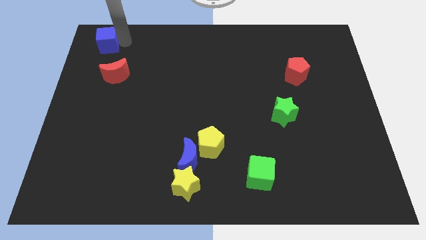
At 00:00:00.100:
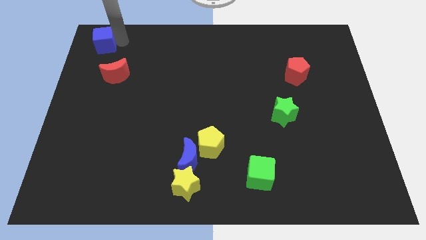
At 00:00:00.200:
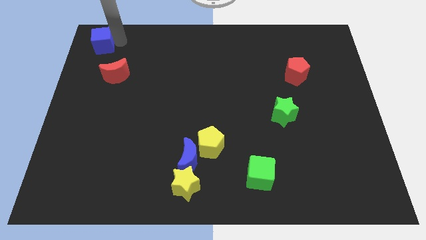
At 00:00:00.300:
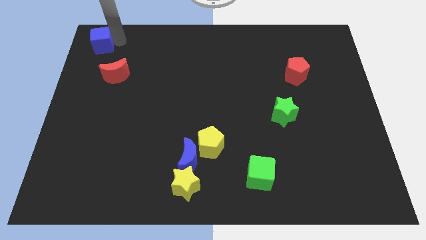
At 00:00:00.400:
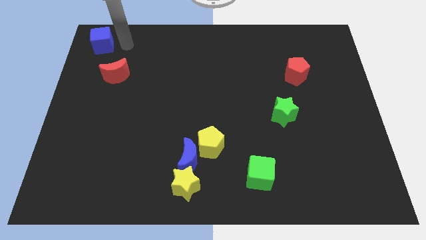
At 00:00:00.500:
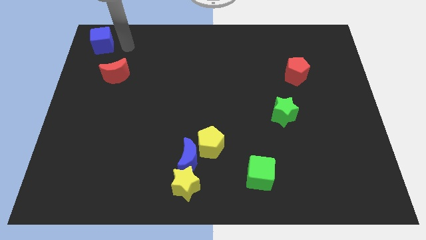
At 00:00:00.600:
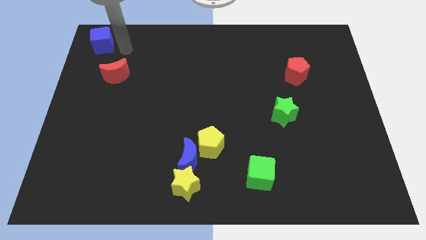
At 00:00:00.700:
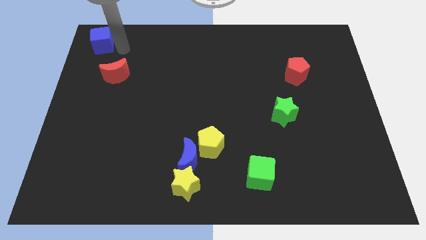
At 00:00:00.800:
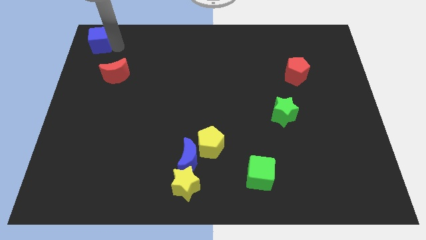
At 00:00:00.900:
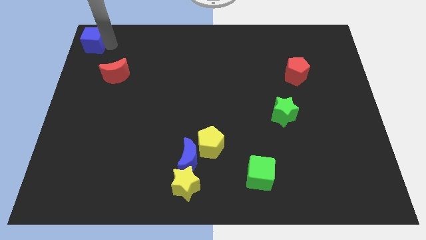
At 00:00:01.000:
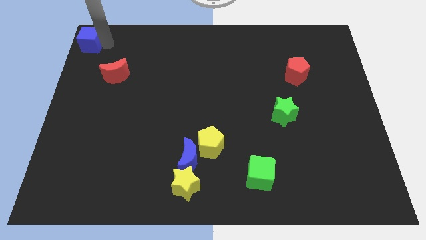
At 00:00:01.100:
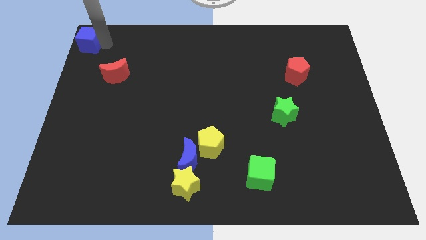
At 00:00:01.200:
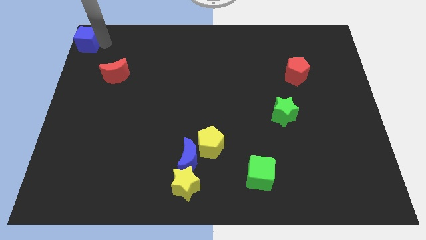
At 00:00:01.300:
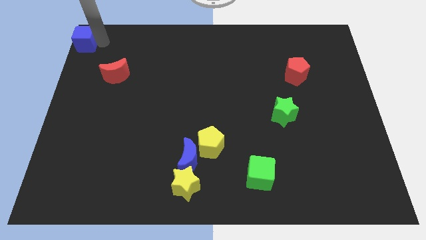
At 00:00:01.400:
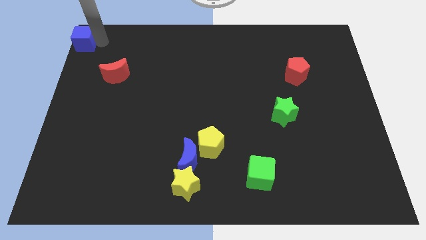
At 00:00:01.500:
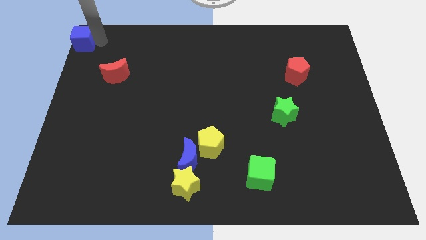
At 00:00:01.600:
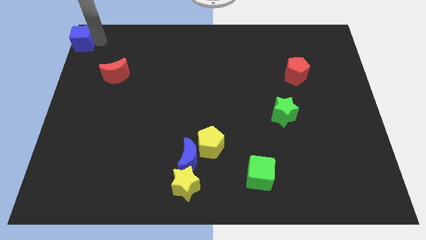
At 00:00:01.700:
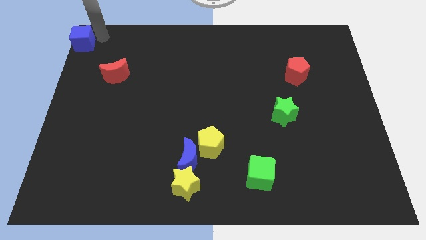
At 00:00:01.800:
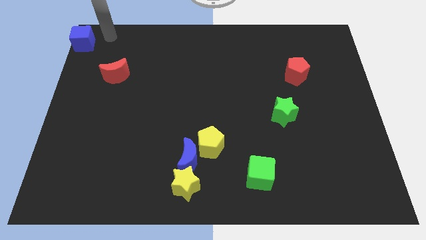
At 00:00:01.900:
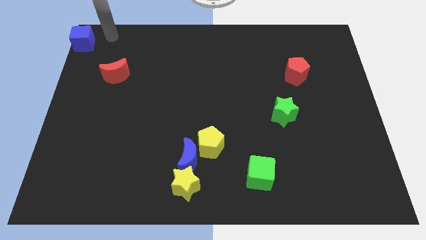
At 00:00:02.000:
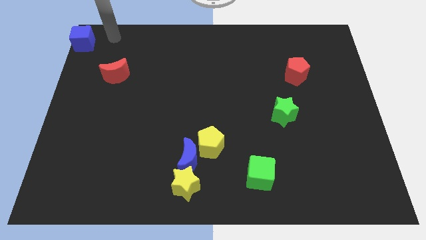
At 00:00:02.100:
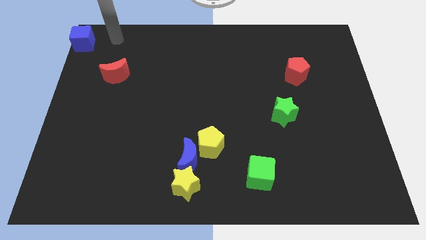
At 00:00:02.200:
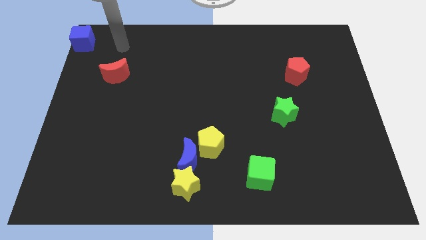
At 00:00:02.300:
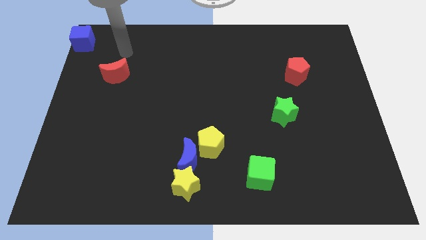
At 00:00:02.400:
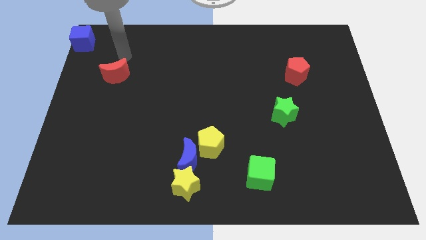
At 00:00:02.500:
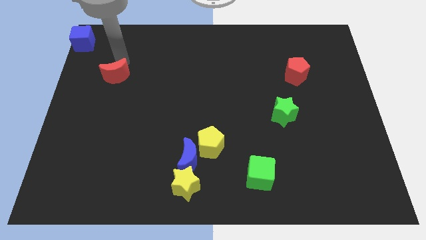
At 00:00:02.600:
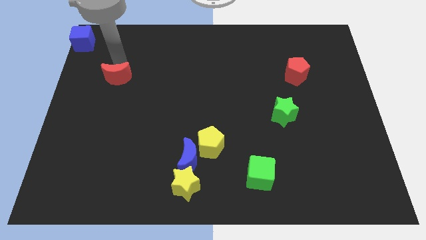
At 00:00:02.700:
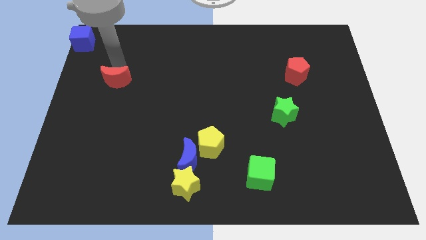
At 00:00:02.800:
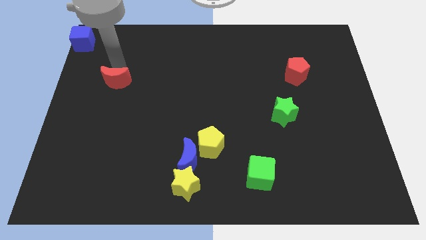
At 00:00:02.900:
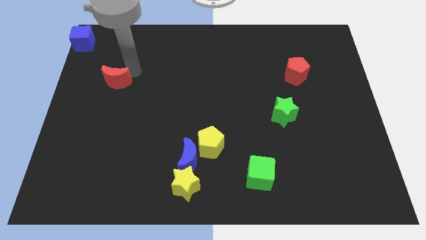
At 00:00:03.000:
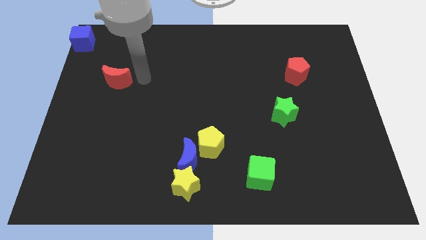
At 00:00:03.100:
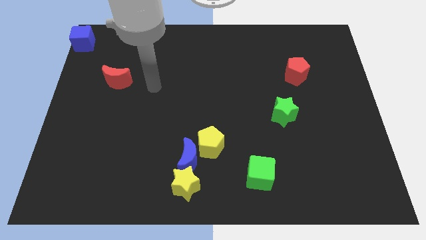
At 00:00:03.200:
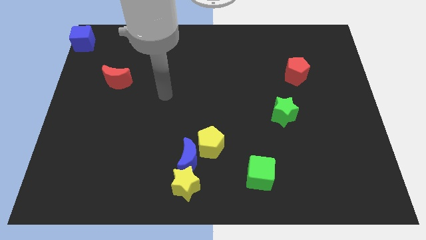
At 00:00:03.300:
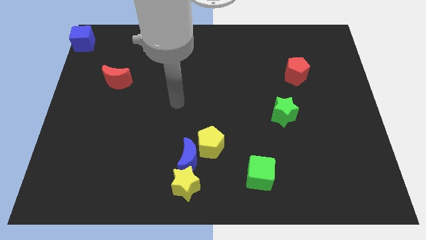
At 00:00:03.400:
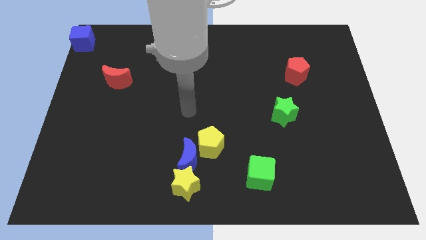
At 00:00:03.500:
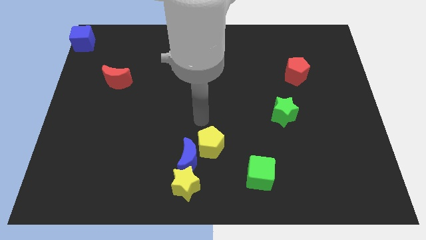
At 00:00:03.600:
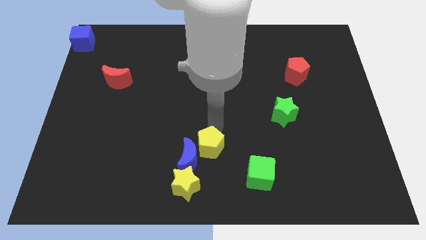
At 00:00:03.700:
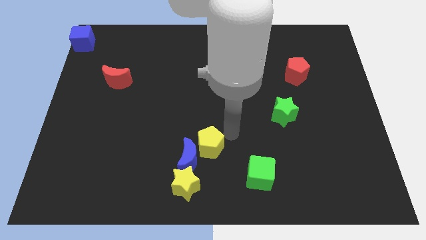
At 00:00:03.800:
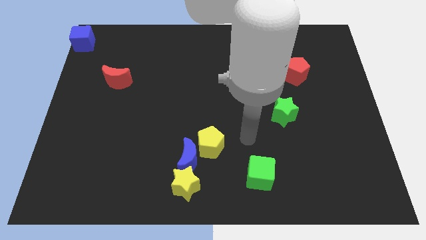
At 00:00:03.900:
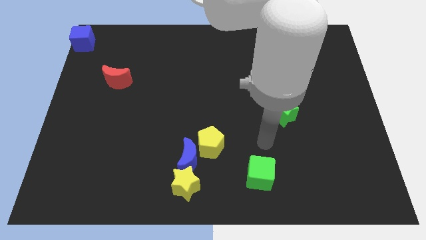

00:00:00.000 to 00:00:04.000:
move the blue cube to the top left side of the board

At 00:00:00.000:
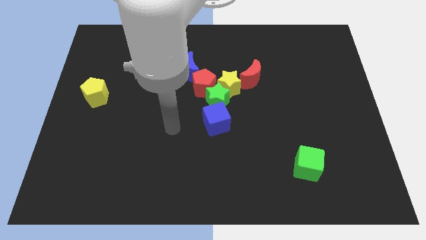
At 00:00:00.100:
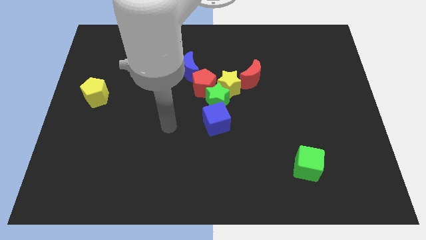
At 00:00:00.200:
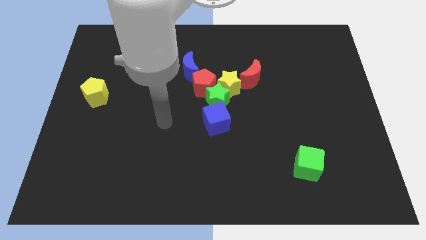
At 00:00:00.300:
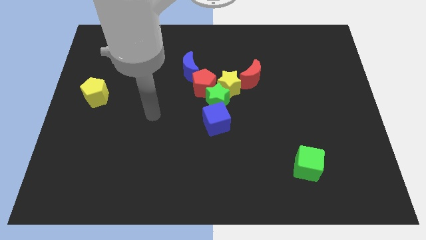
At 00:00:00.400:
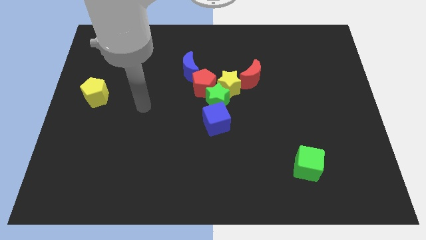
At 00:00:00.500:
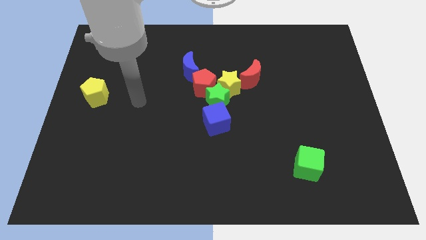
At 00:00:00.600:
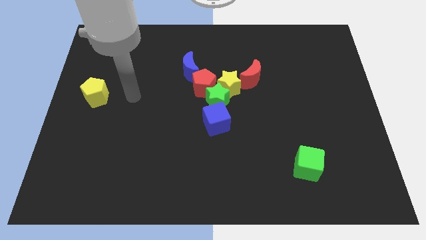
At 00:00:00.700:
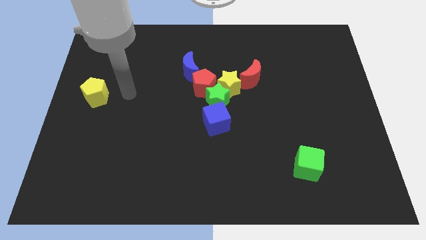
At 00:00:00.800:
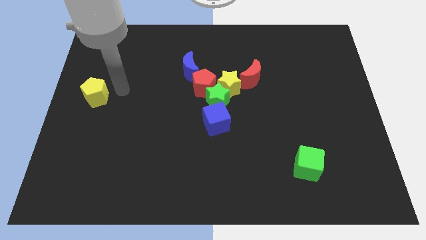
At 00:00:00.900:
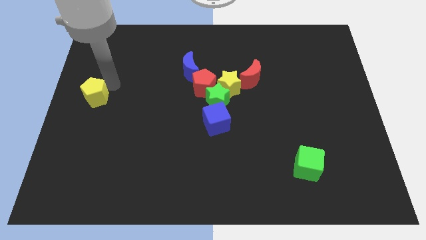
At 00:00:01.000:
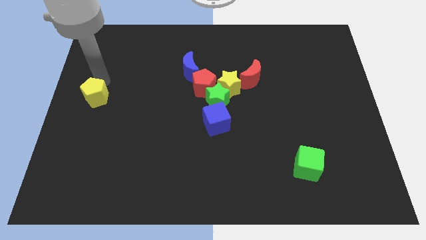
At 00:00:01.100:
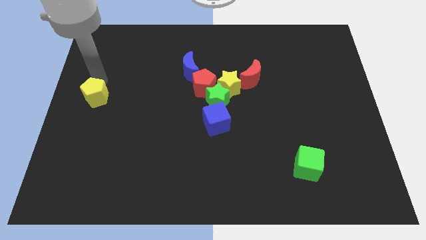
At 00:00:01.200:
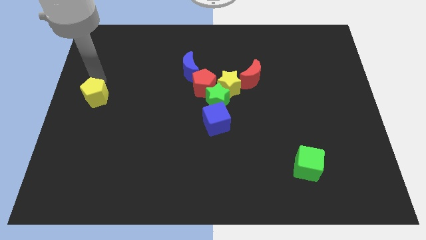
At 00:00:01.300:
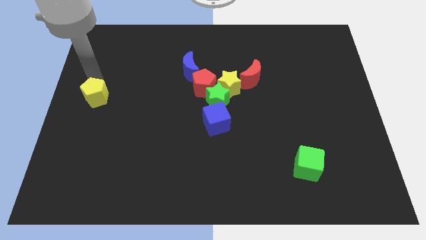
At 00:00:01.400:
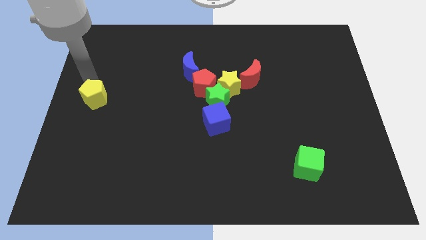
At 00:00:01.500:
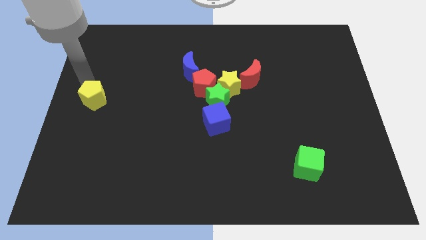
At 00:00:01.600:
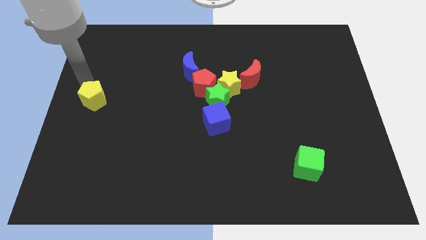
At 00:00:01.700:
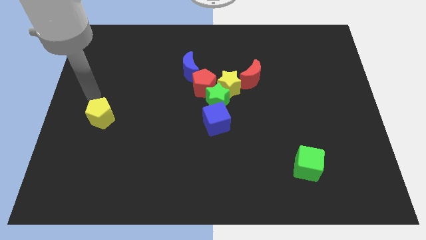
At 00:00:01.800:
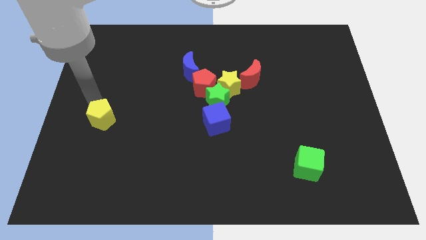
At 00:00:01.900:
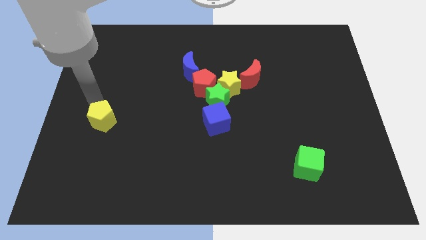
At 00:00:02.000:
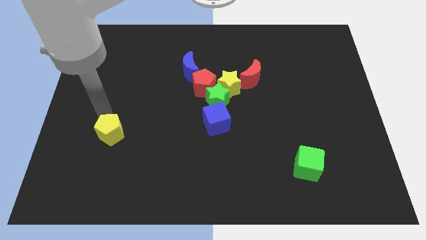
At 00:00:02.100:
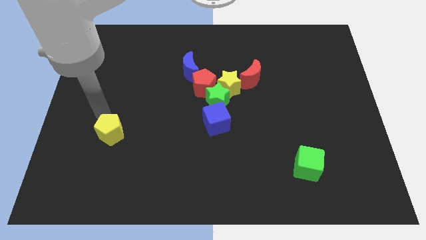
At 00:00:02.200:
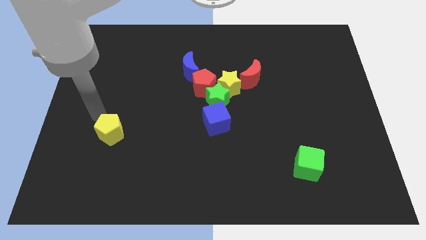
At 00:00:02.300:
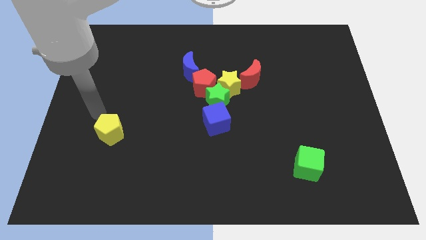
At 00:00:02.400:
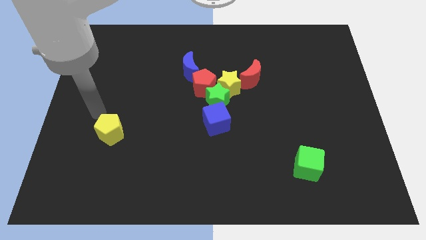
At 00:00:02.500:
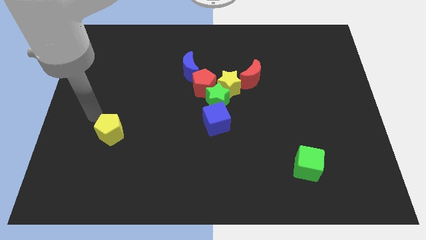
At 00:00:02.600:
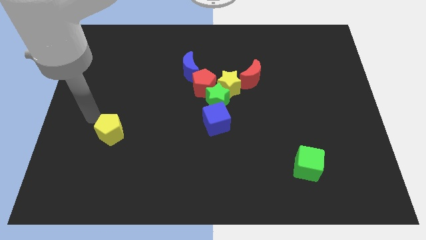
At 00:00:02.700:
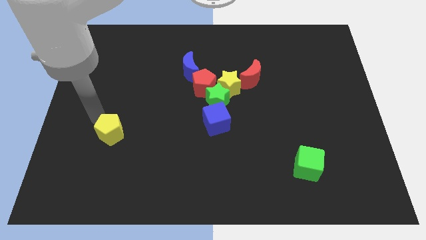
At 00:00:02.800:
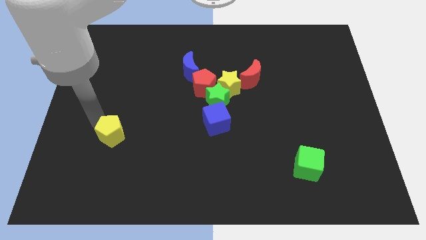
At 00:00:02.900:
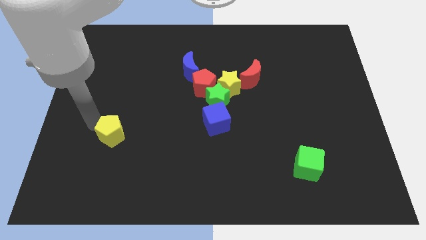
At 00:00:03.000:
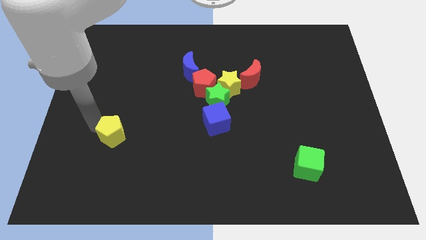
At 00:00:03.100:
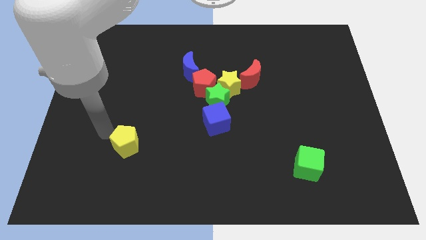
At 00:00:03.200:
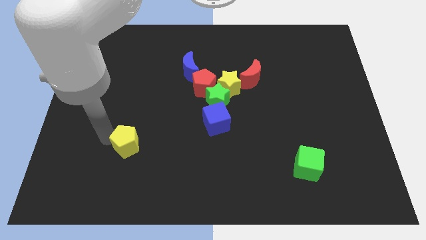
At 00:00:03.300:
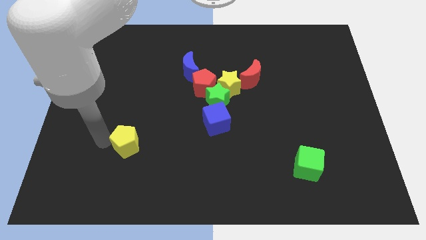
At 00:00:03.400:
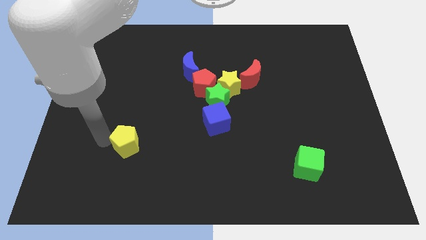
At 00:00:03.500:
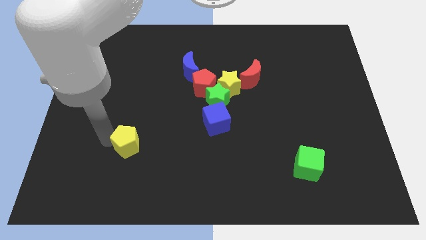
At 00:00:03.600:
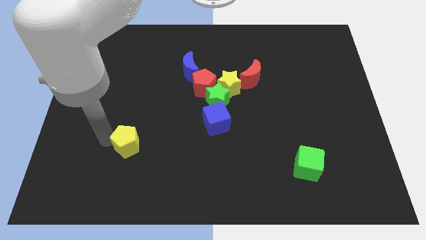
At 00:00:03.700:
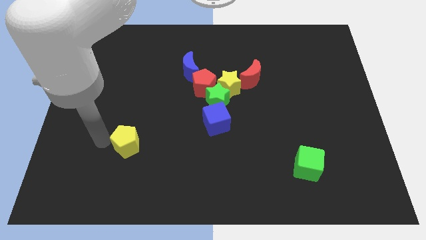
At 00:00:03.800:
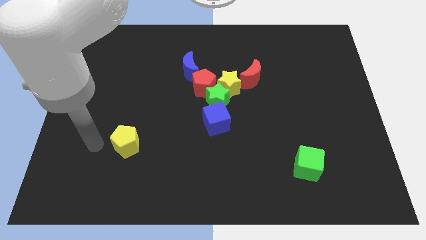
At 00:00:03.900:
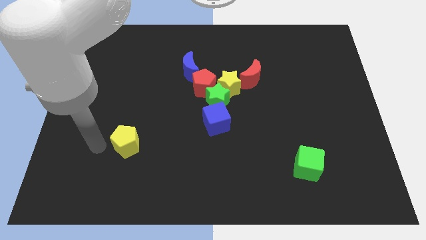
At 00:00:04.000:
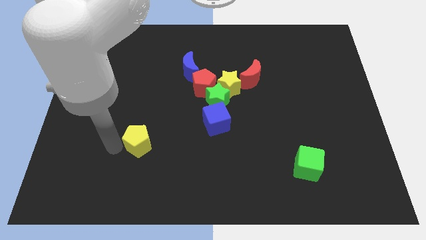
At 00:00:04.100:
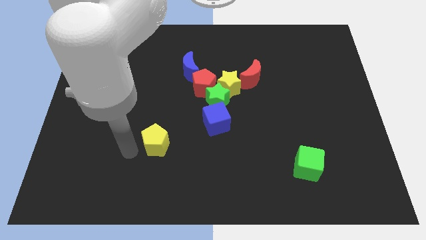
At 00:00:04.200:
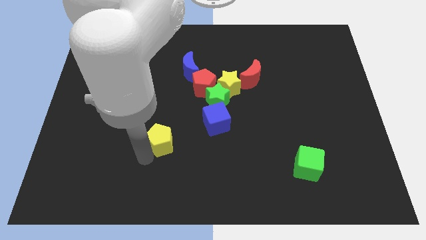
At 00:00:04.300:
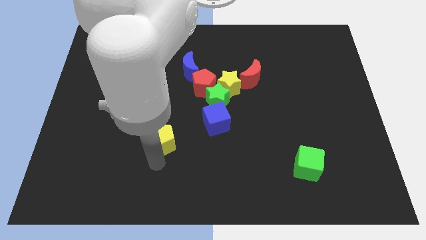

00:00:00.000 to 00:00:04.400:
move yellow pentagon towards the centre of the board

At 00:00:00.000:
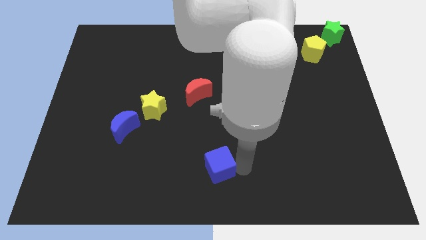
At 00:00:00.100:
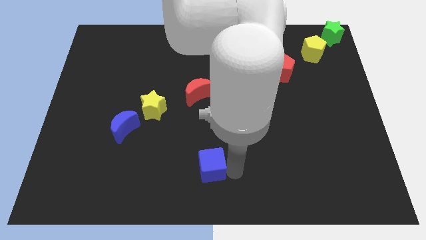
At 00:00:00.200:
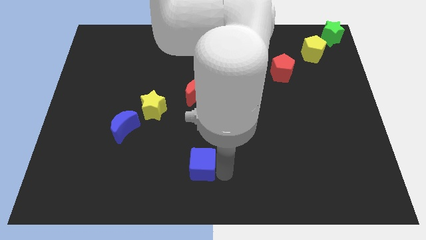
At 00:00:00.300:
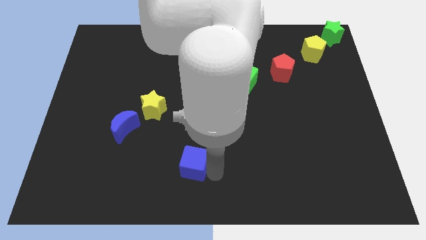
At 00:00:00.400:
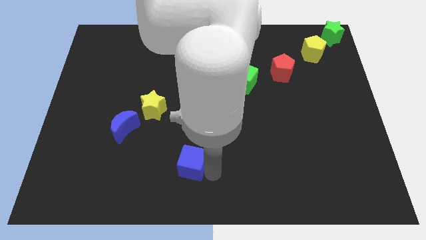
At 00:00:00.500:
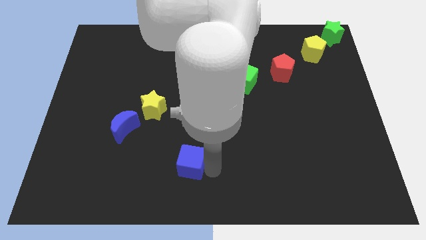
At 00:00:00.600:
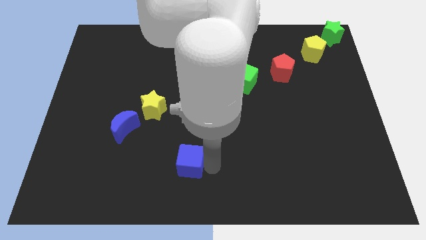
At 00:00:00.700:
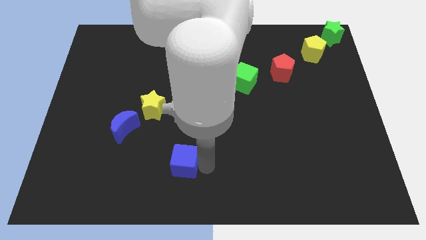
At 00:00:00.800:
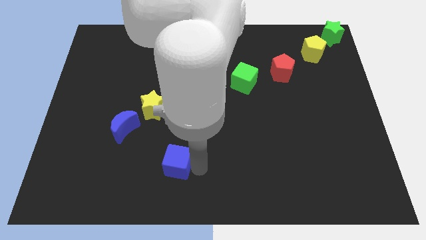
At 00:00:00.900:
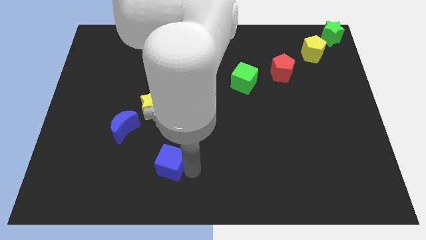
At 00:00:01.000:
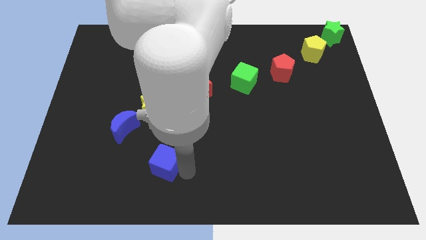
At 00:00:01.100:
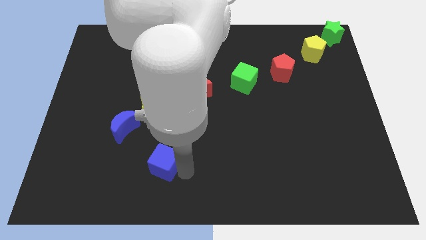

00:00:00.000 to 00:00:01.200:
place blue cube below blue crescent
